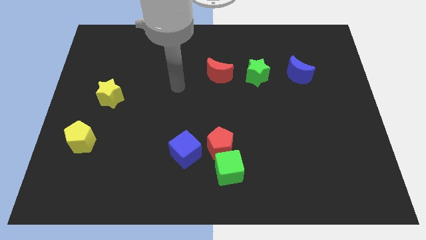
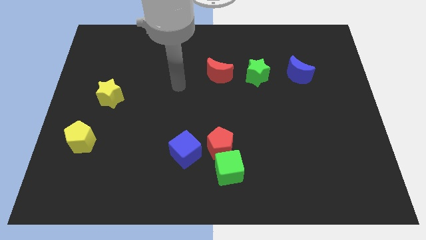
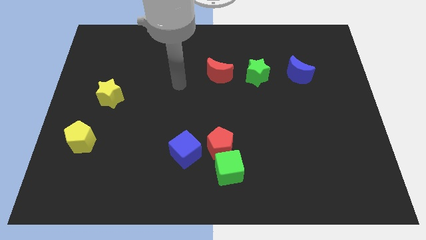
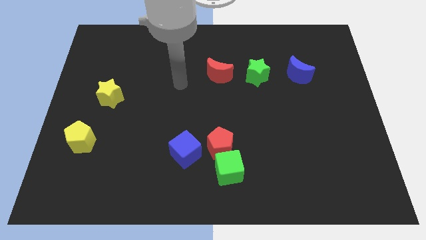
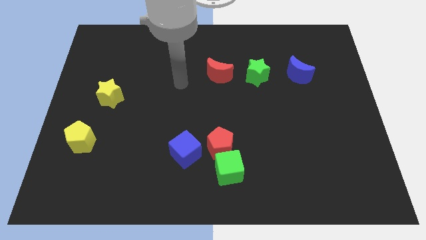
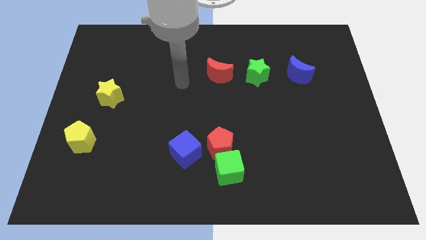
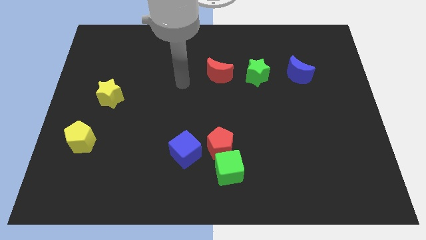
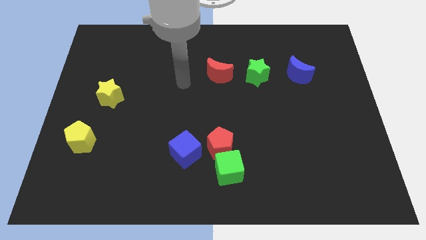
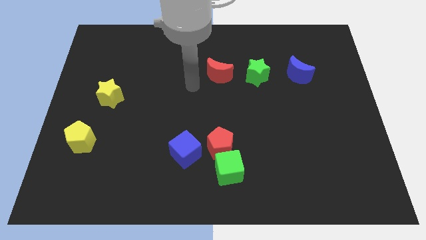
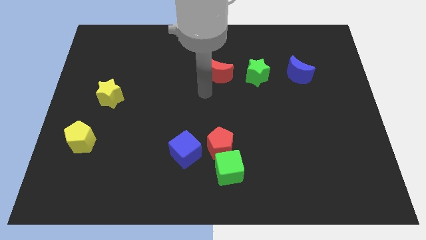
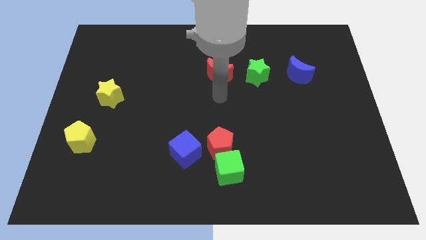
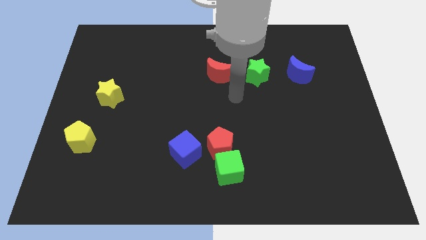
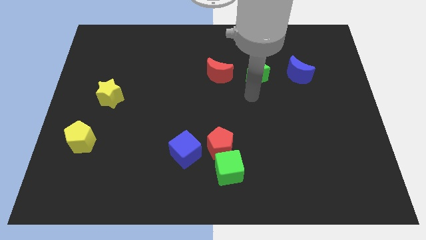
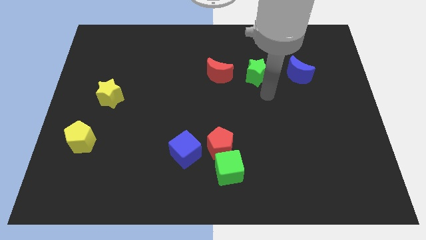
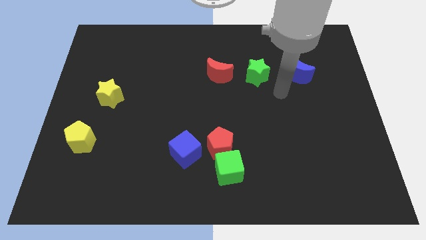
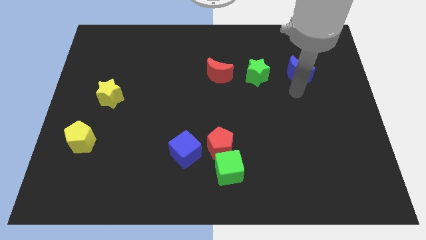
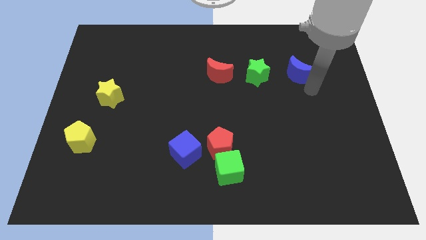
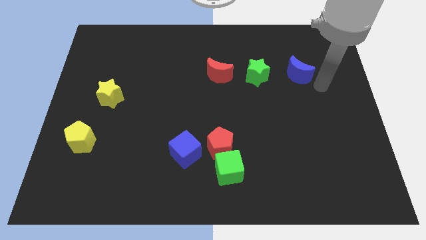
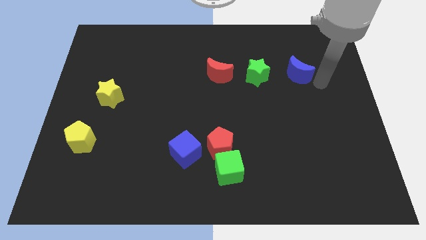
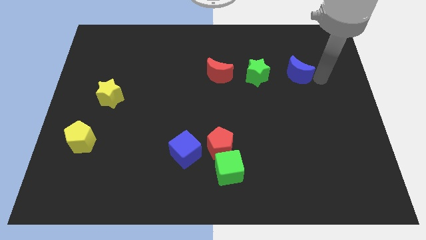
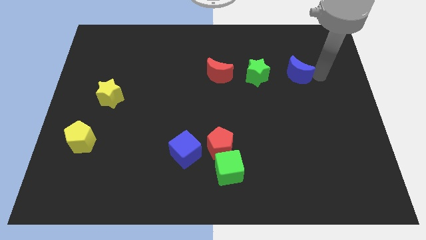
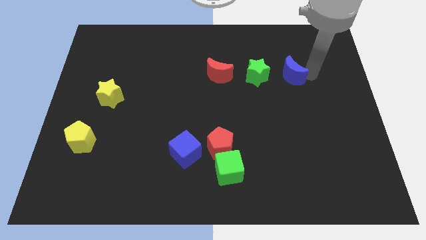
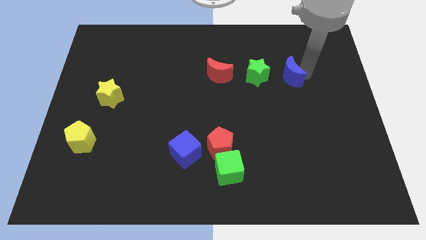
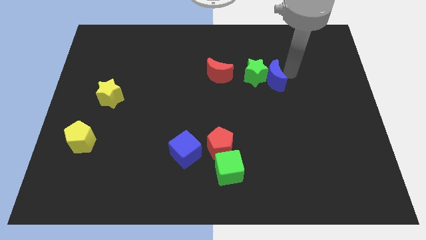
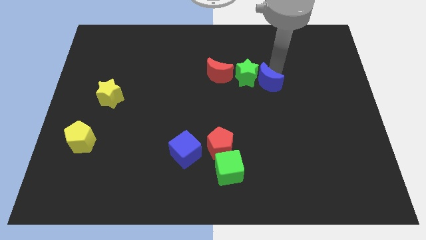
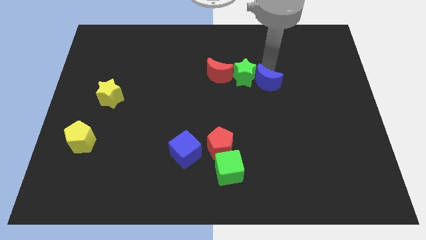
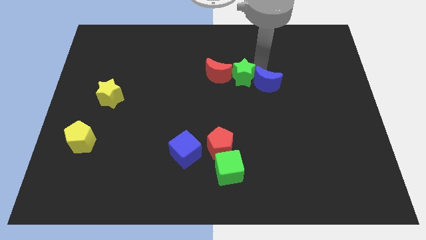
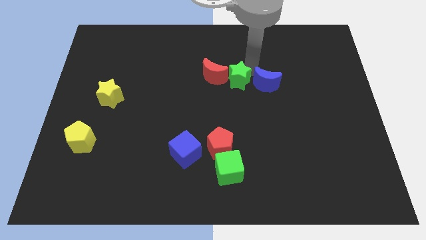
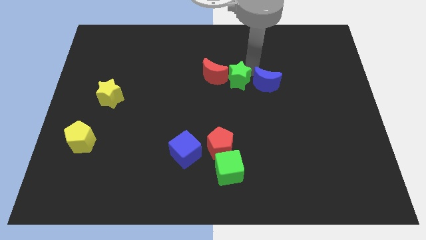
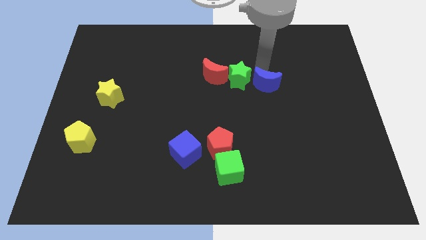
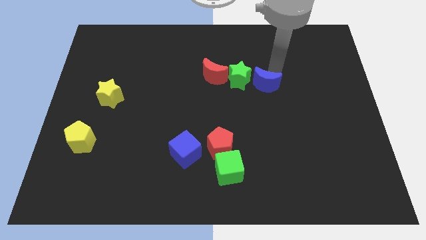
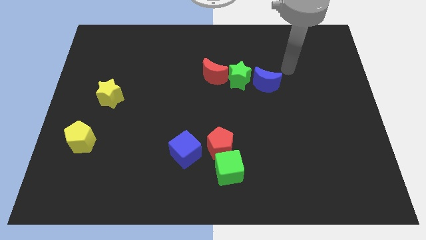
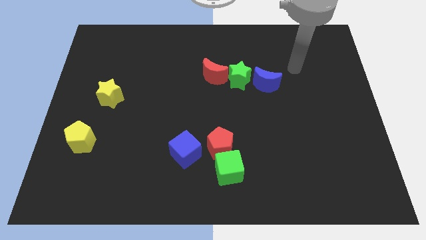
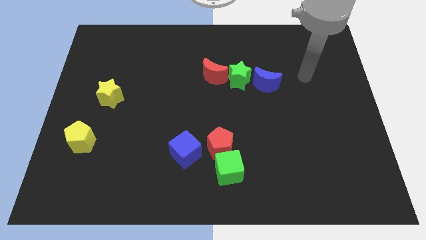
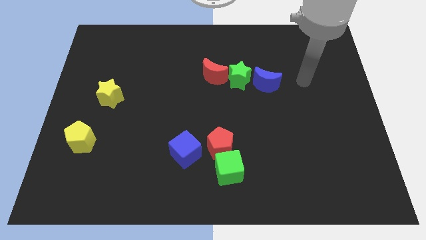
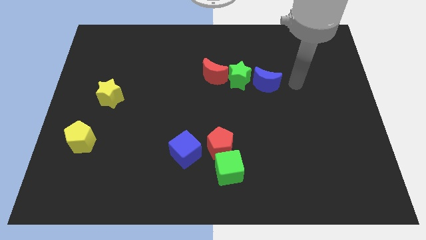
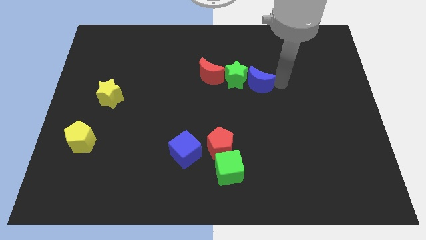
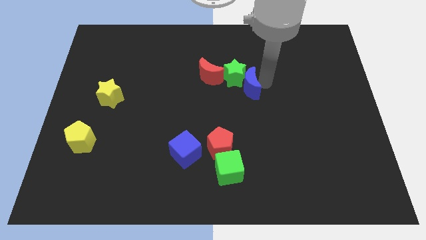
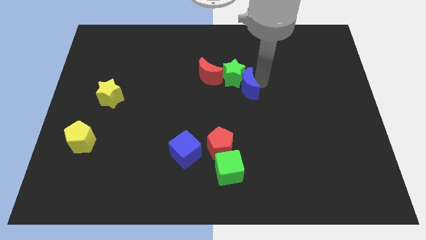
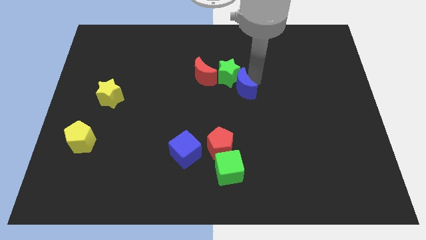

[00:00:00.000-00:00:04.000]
slide the blue moon and the green star into the red crescent

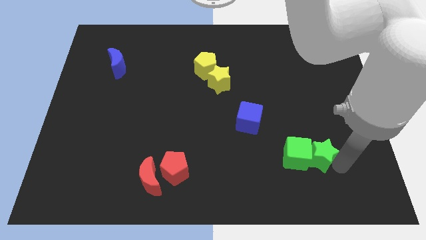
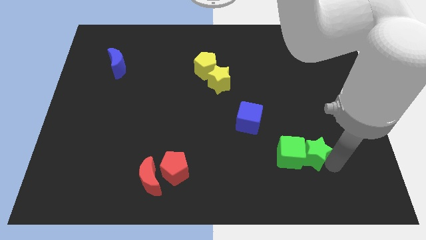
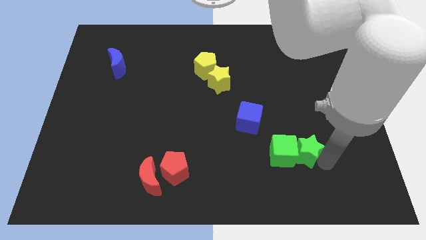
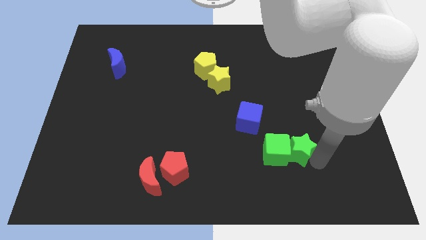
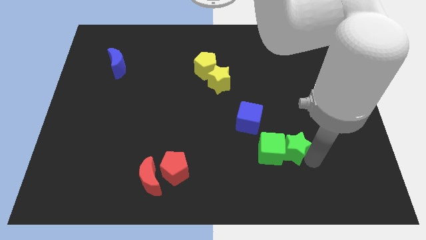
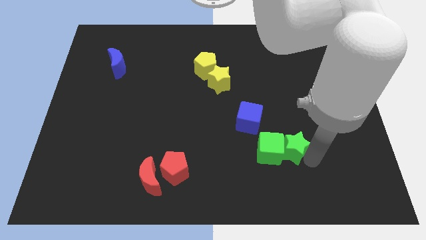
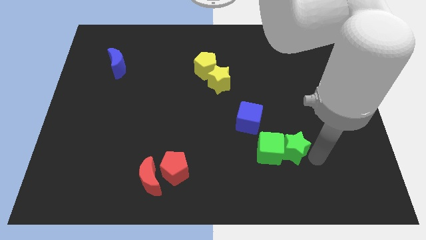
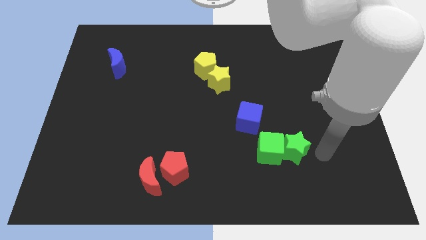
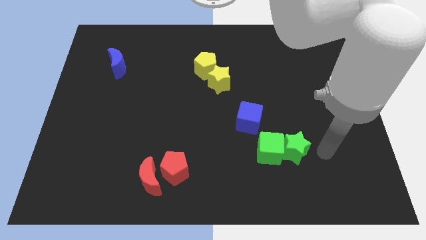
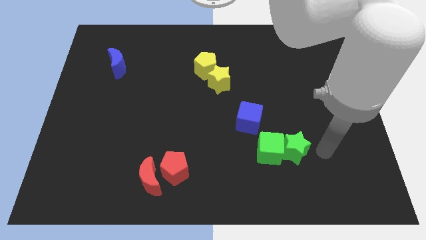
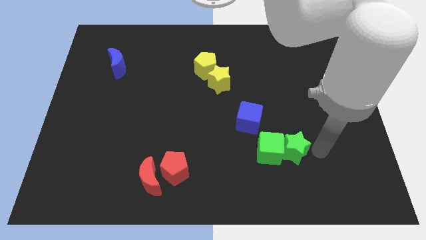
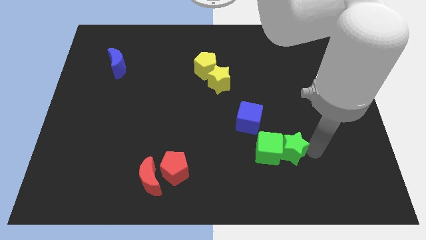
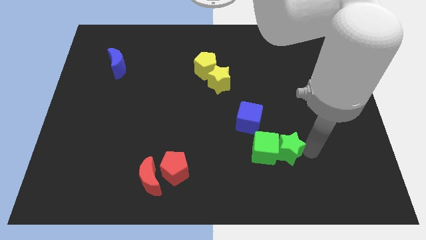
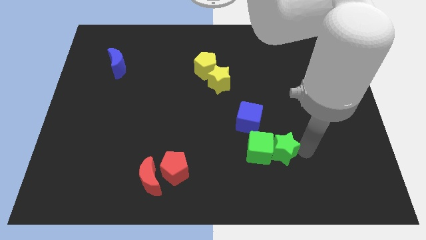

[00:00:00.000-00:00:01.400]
push the green star and green cube together slightly to the left side of the board

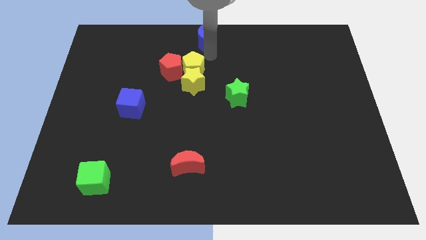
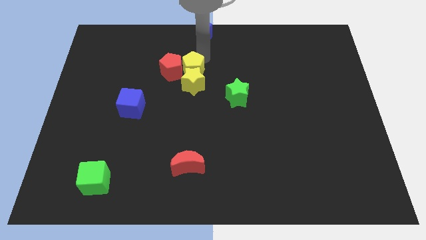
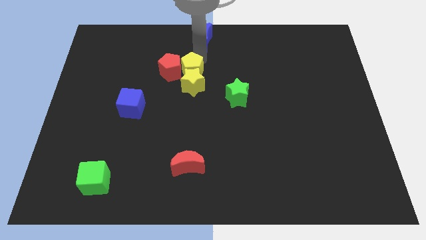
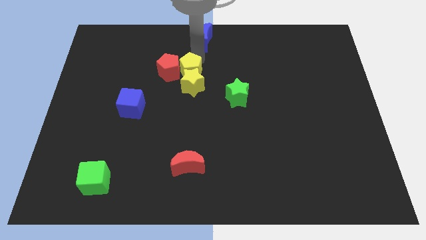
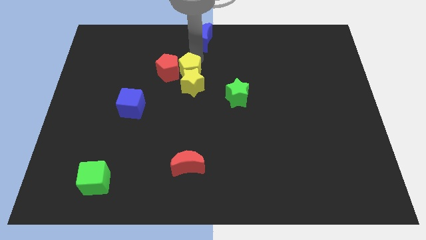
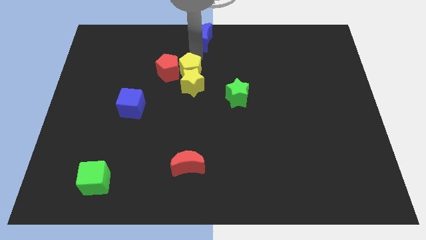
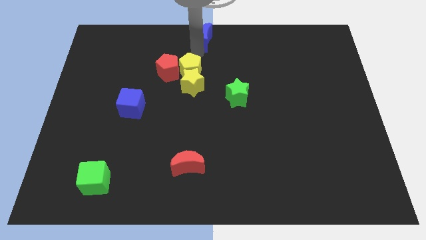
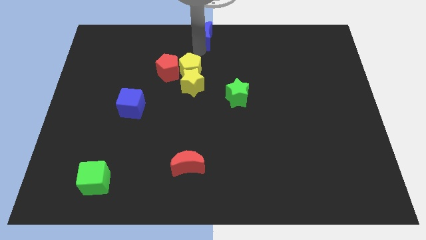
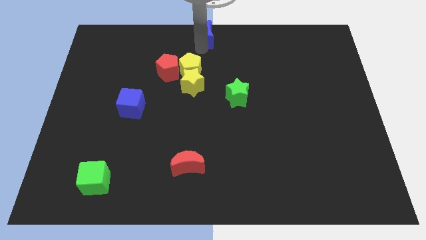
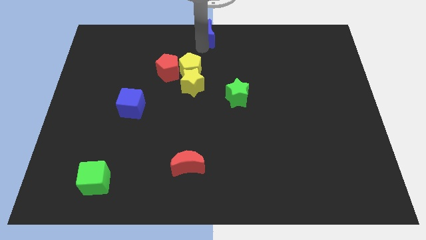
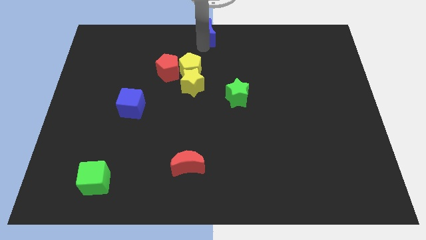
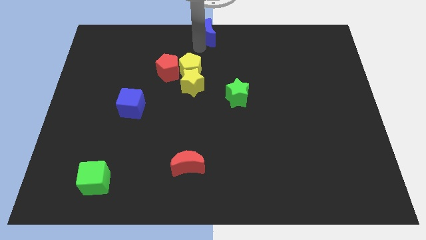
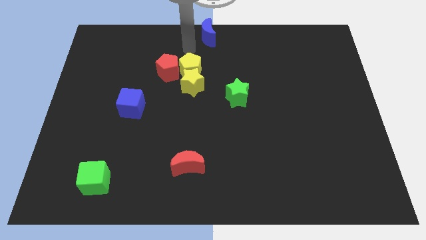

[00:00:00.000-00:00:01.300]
push blue crescent to the top center of the board

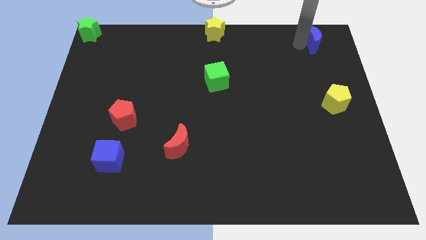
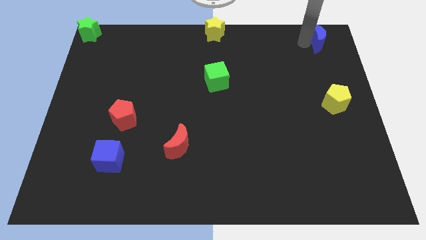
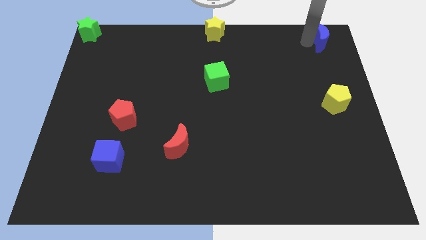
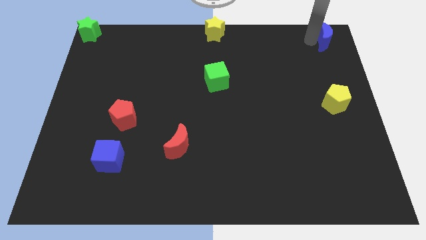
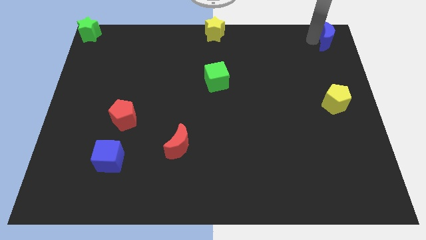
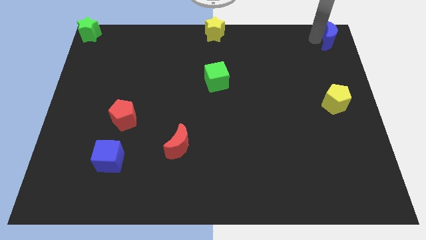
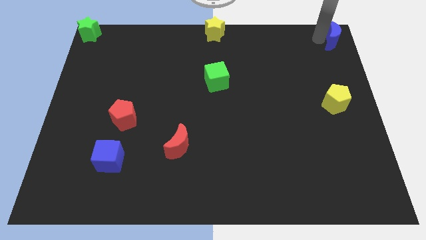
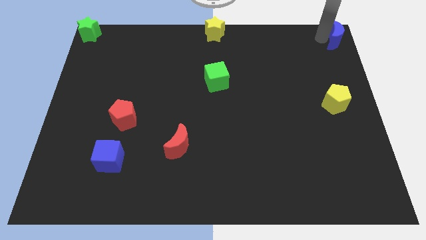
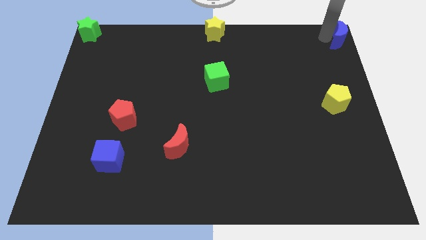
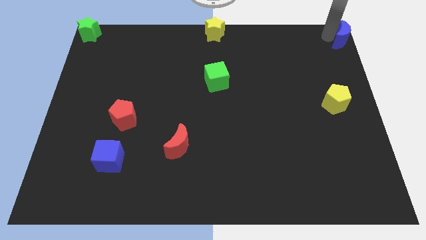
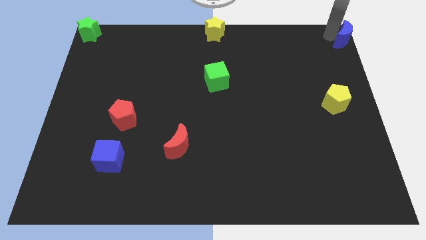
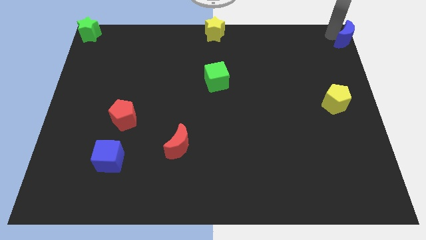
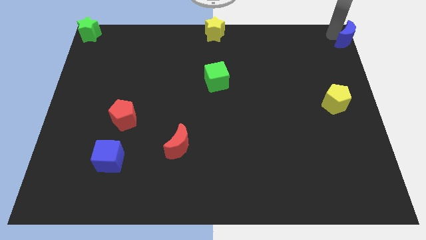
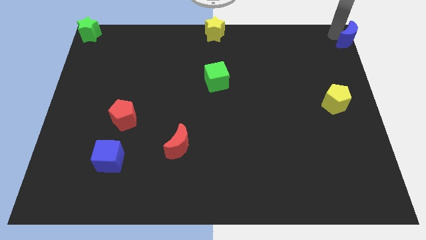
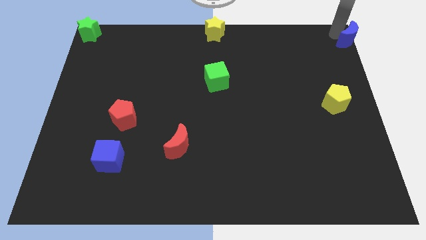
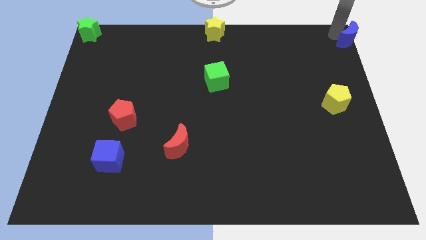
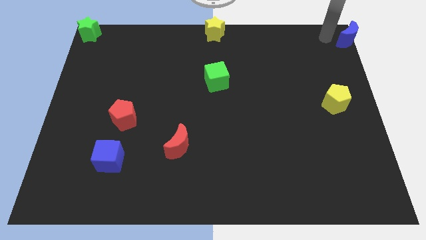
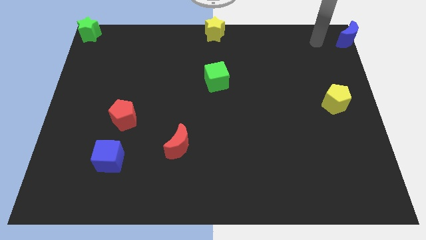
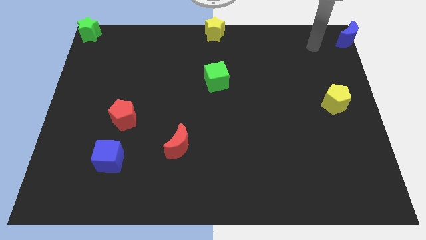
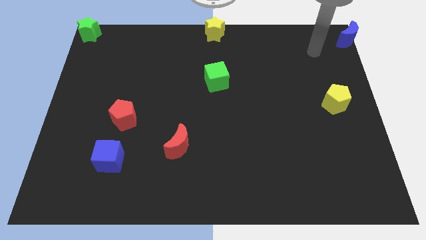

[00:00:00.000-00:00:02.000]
place the blue moon towards the top right corner of the board
